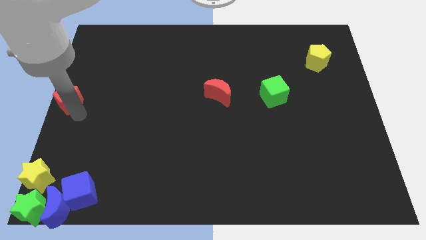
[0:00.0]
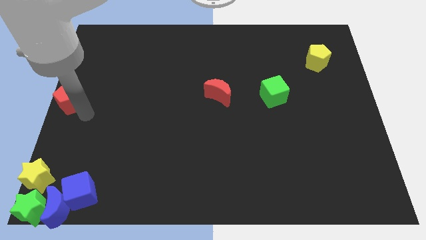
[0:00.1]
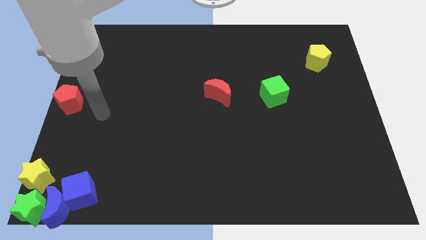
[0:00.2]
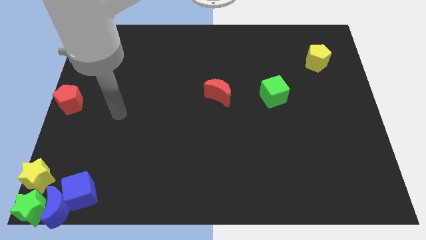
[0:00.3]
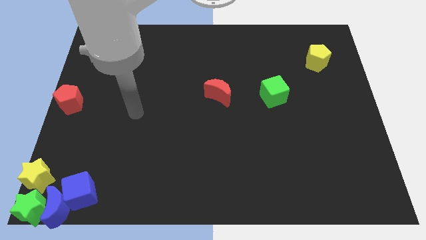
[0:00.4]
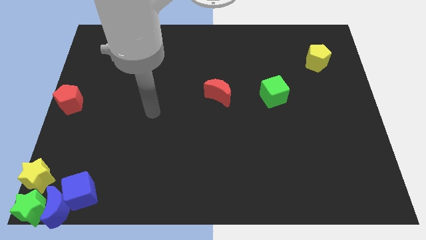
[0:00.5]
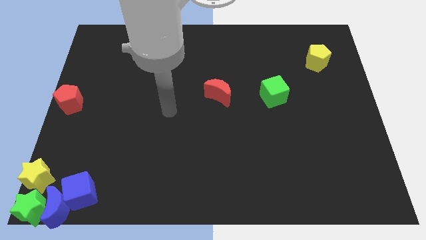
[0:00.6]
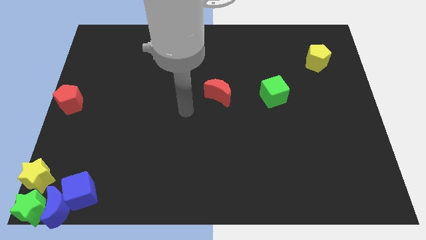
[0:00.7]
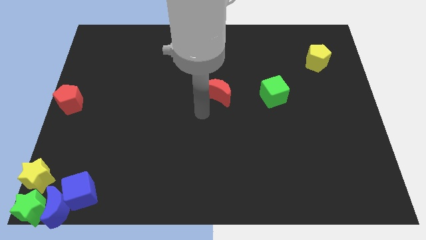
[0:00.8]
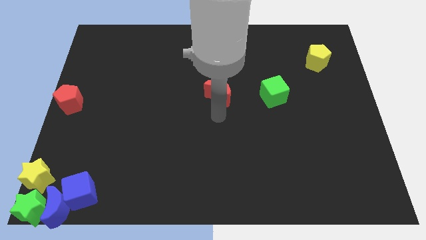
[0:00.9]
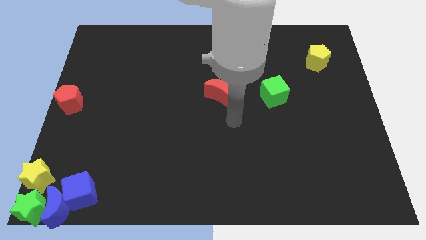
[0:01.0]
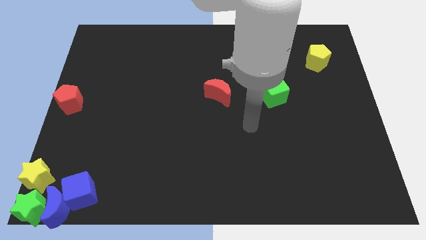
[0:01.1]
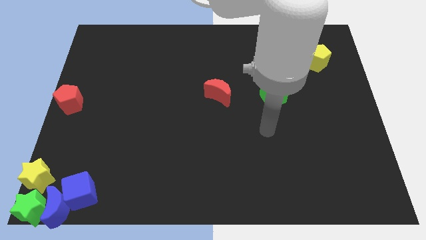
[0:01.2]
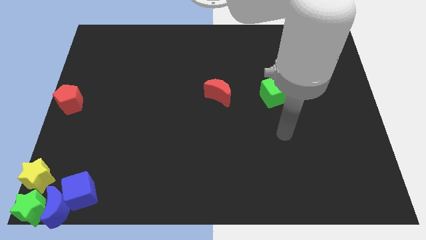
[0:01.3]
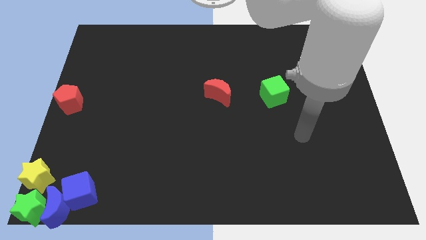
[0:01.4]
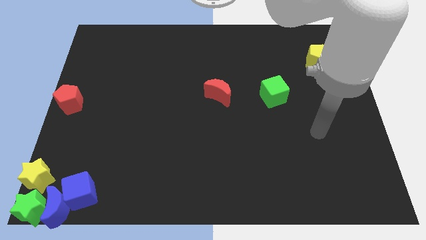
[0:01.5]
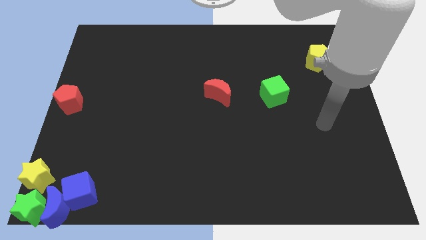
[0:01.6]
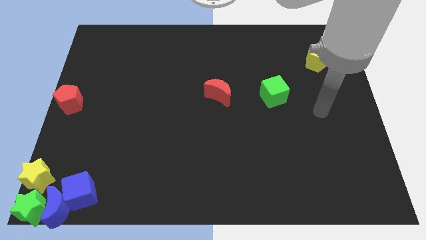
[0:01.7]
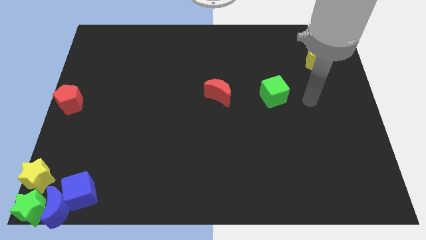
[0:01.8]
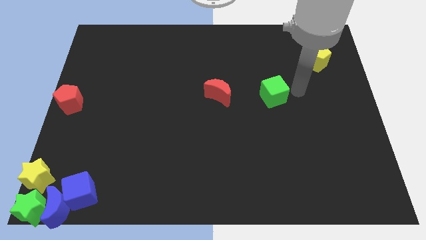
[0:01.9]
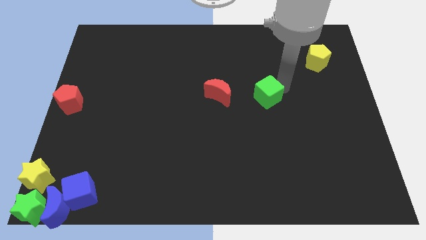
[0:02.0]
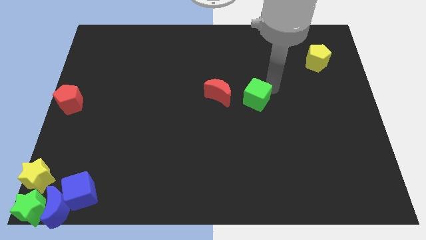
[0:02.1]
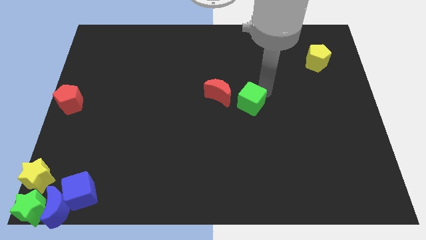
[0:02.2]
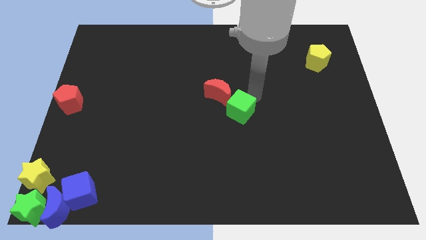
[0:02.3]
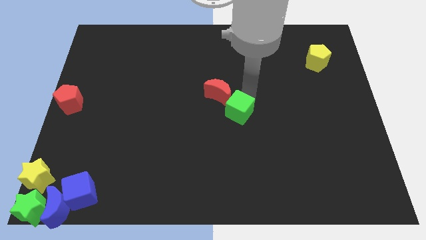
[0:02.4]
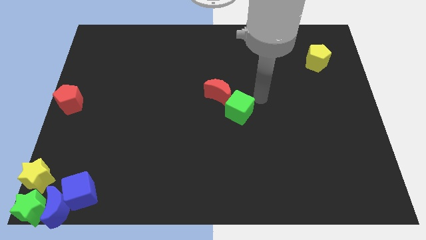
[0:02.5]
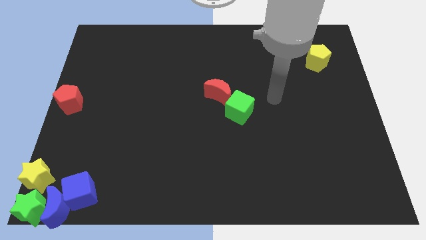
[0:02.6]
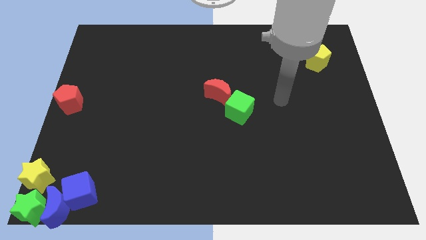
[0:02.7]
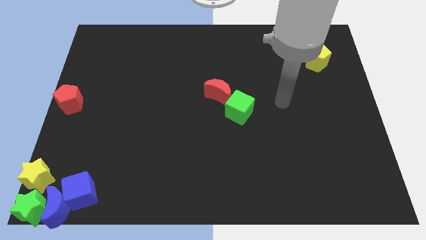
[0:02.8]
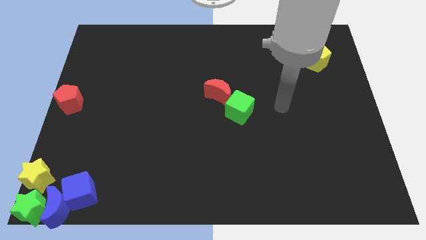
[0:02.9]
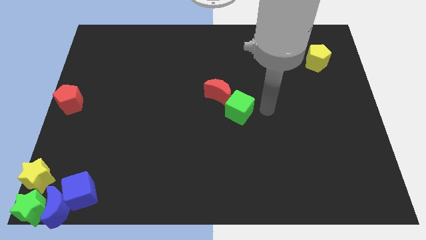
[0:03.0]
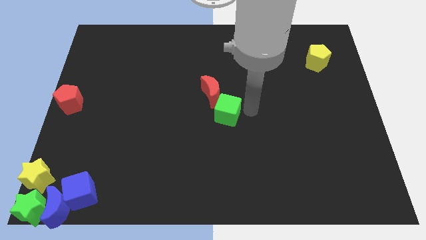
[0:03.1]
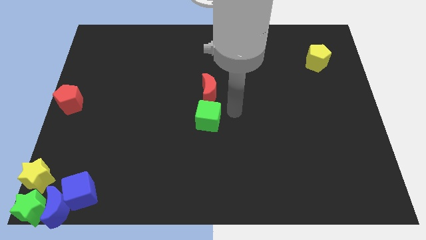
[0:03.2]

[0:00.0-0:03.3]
place the green cube at the bottom side of the red crescent

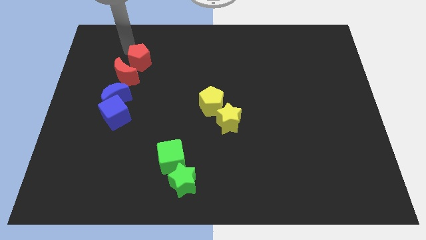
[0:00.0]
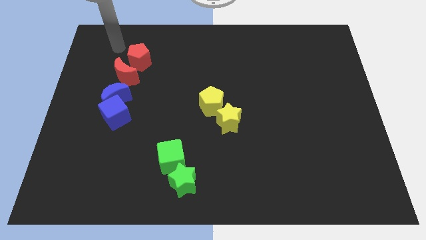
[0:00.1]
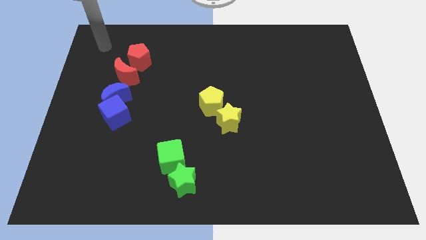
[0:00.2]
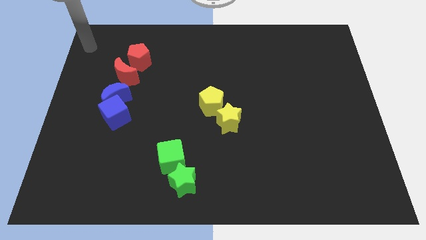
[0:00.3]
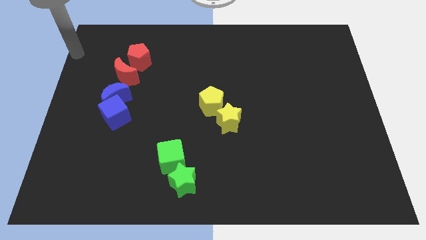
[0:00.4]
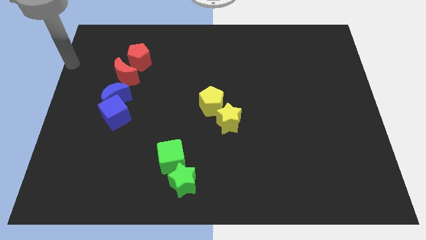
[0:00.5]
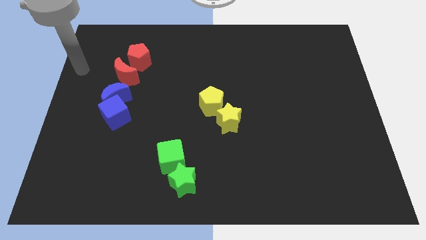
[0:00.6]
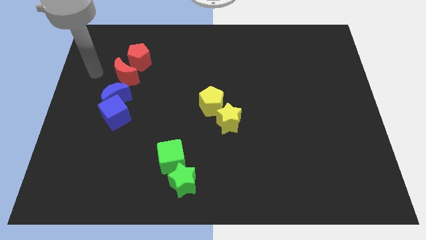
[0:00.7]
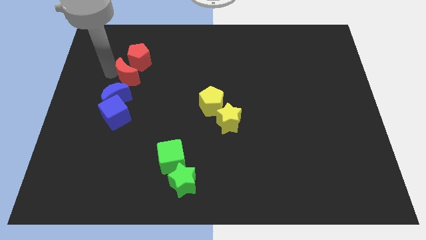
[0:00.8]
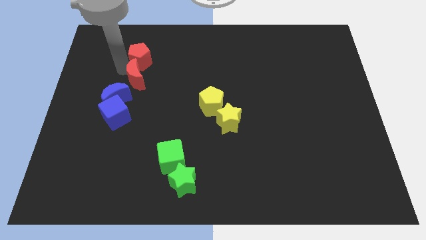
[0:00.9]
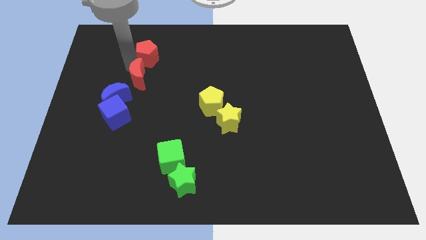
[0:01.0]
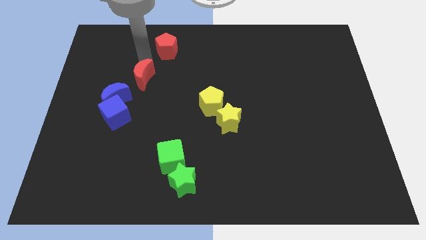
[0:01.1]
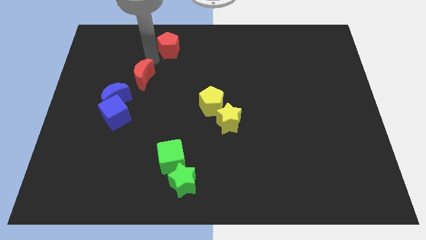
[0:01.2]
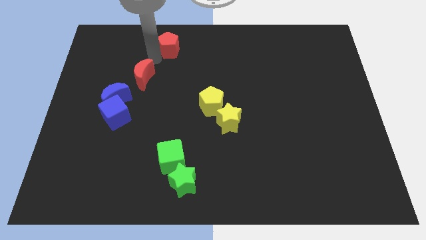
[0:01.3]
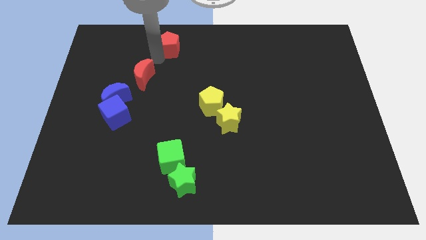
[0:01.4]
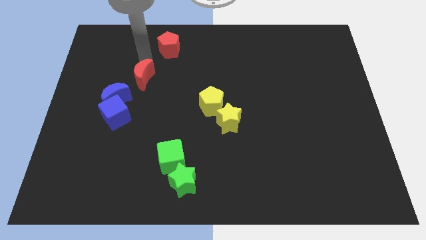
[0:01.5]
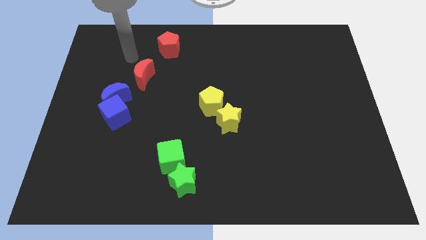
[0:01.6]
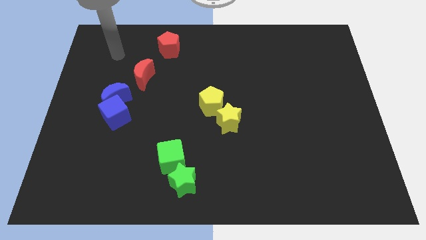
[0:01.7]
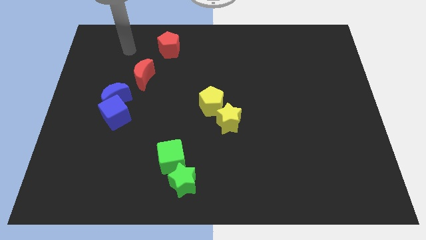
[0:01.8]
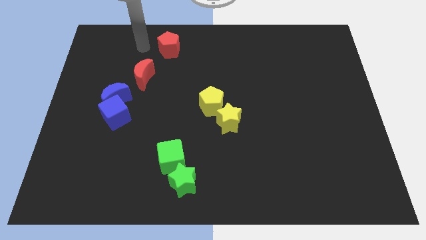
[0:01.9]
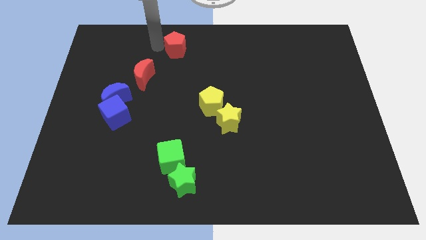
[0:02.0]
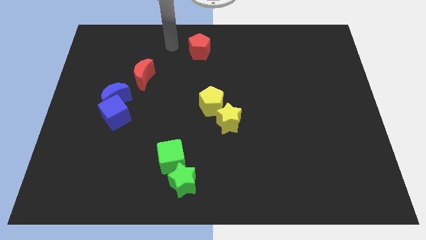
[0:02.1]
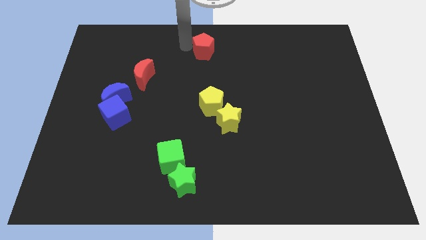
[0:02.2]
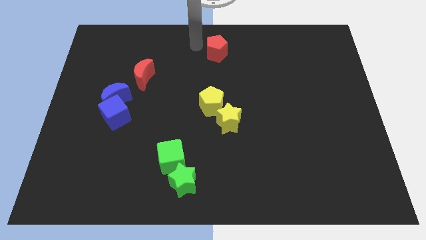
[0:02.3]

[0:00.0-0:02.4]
put the red pentagon vertically above the yellow pentagon

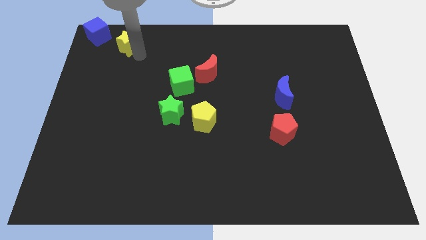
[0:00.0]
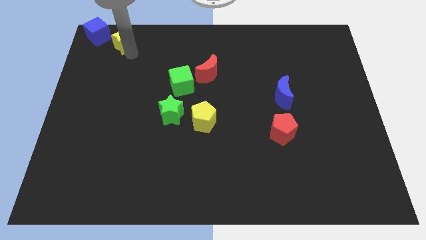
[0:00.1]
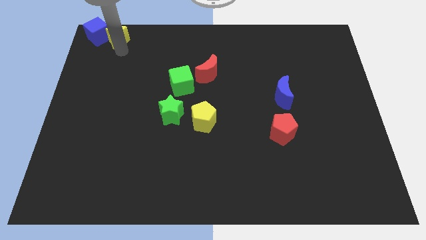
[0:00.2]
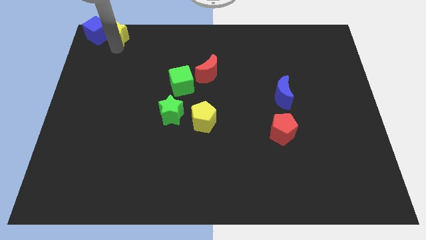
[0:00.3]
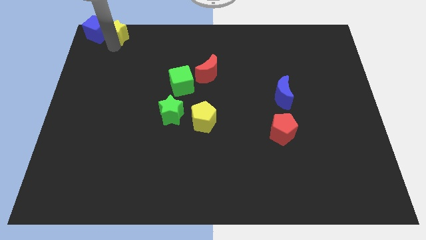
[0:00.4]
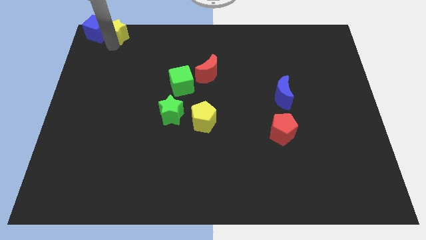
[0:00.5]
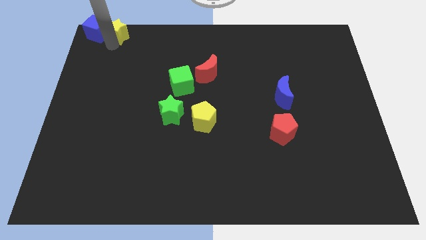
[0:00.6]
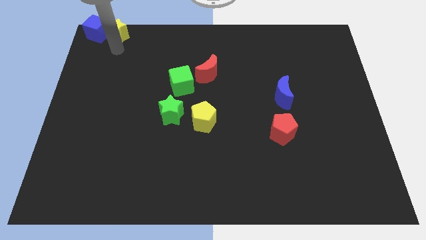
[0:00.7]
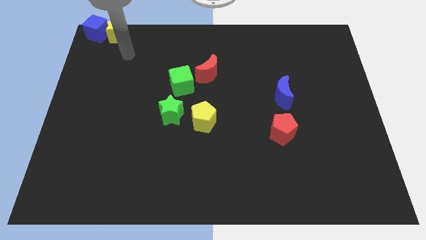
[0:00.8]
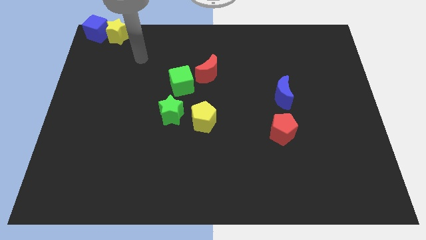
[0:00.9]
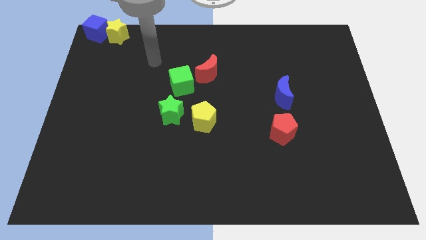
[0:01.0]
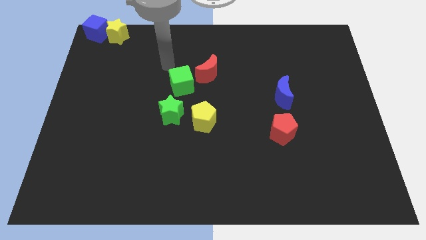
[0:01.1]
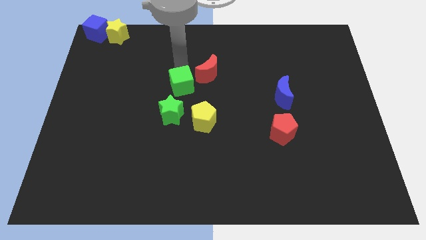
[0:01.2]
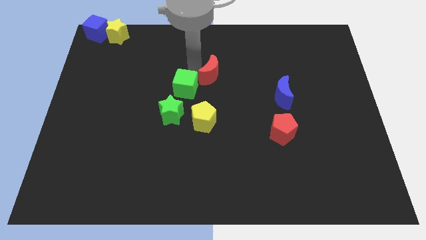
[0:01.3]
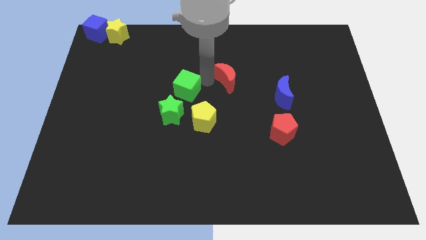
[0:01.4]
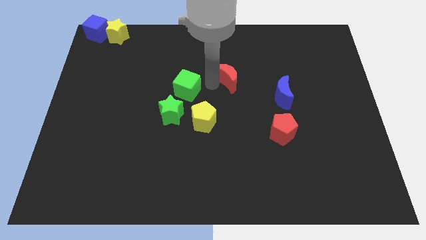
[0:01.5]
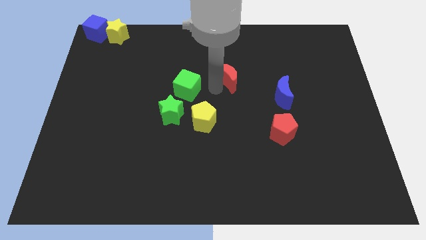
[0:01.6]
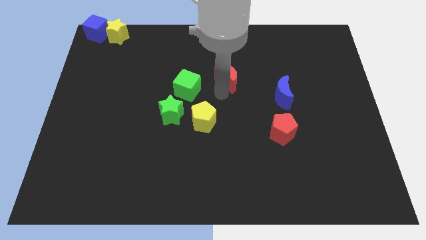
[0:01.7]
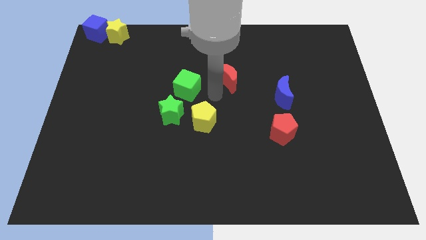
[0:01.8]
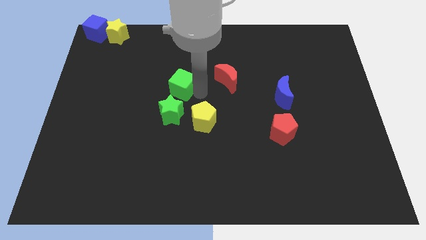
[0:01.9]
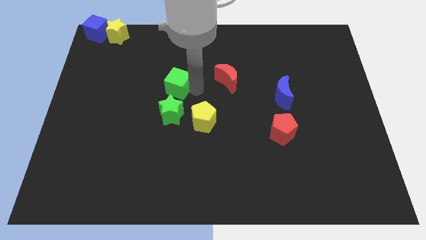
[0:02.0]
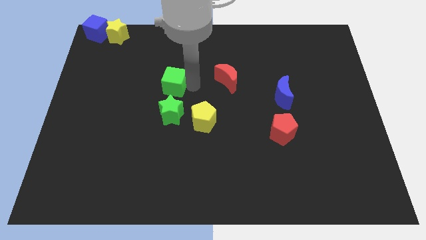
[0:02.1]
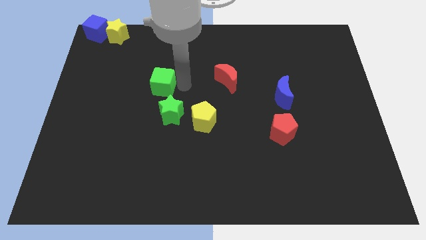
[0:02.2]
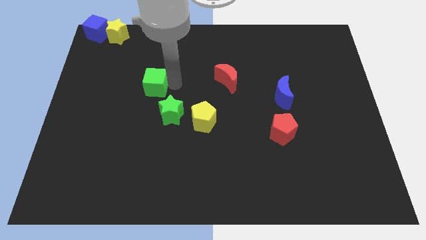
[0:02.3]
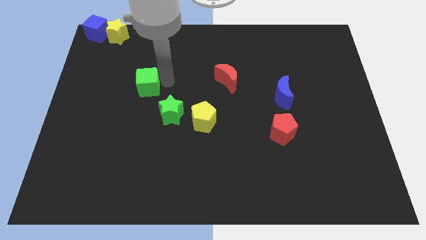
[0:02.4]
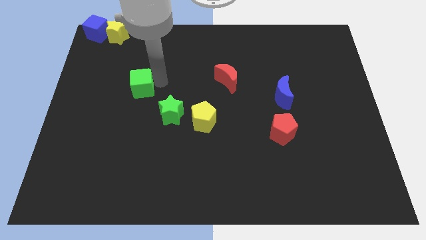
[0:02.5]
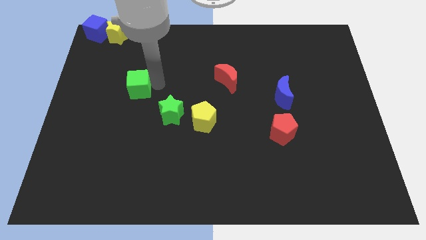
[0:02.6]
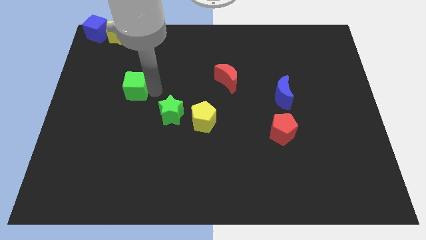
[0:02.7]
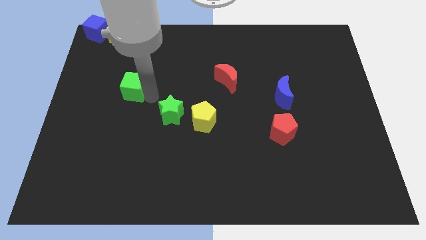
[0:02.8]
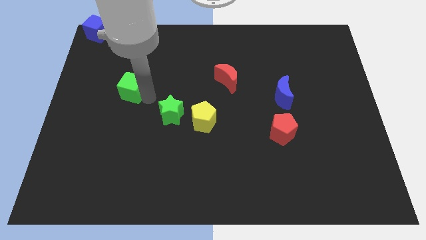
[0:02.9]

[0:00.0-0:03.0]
place the green cube towards the top left side of the green star

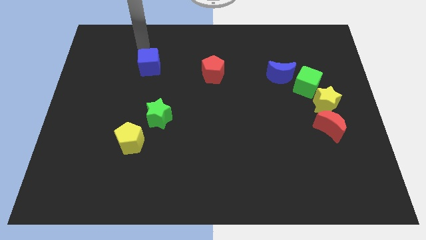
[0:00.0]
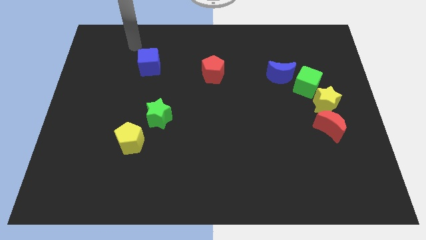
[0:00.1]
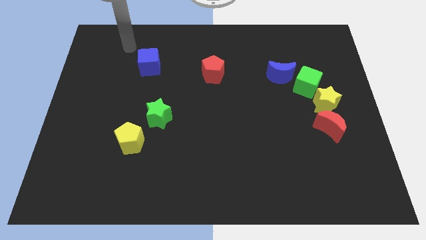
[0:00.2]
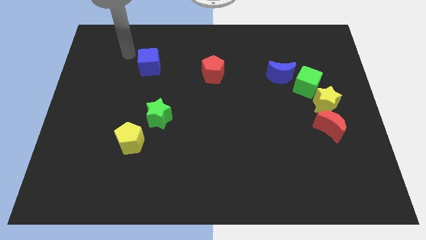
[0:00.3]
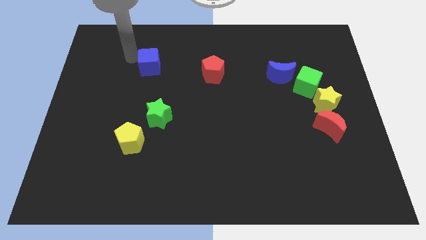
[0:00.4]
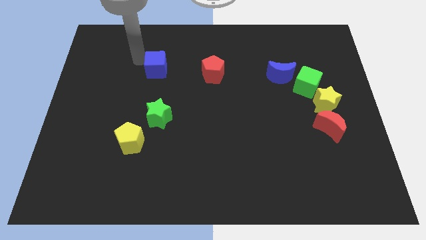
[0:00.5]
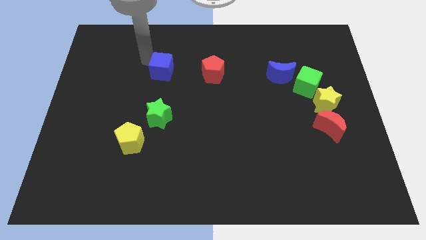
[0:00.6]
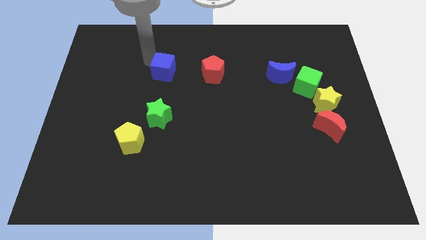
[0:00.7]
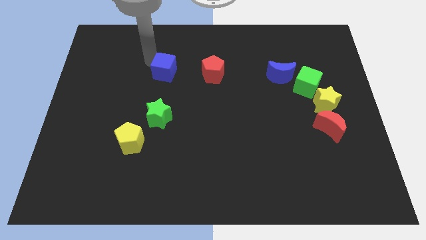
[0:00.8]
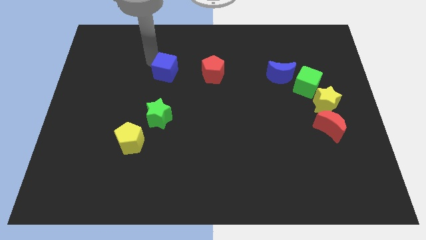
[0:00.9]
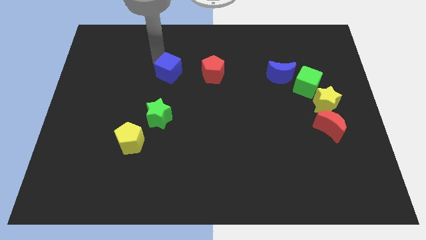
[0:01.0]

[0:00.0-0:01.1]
move the blue cube to the left of the red pentagon
